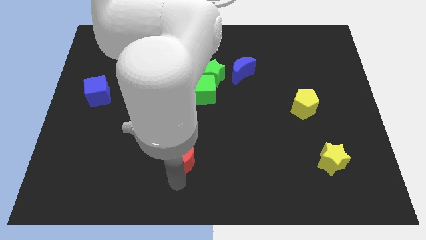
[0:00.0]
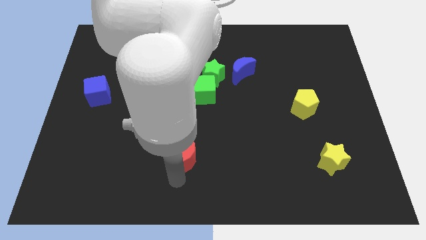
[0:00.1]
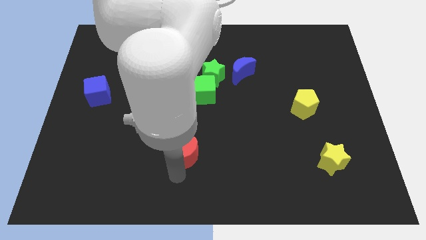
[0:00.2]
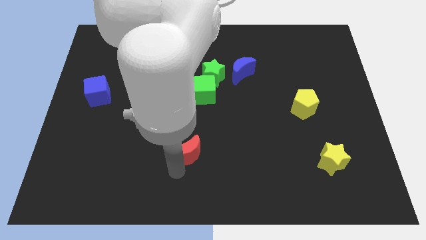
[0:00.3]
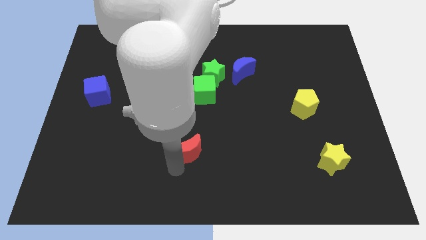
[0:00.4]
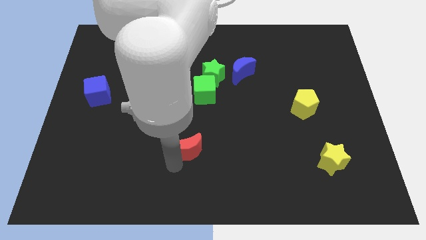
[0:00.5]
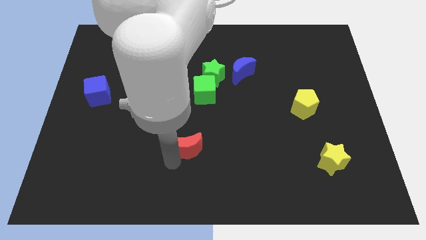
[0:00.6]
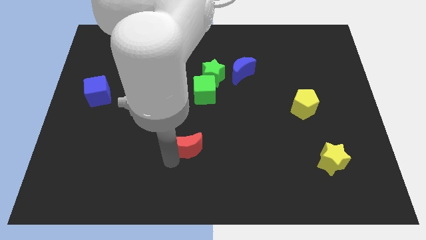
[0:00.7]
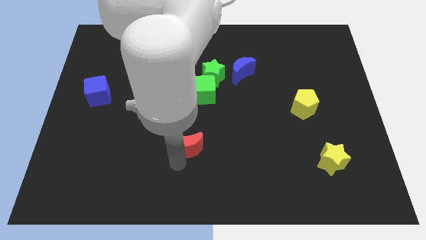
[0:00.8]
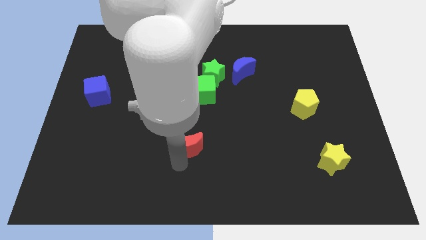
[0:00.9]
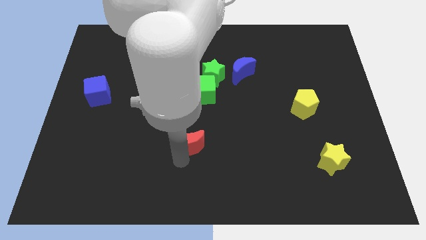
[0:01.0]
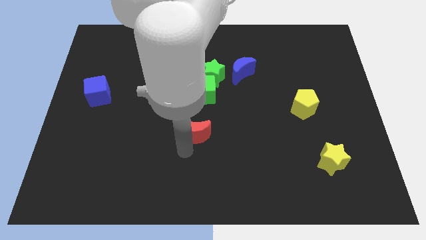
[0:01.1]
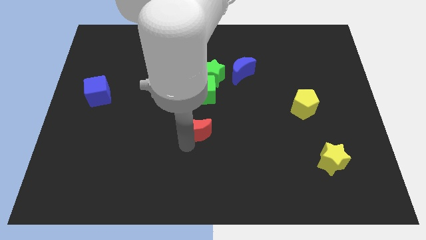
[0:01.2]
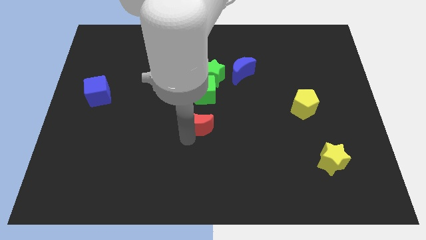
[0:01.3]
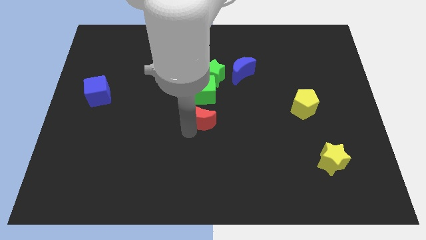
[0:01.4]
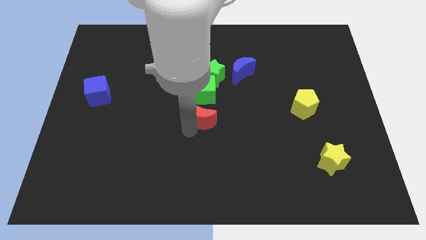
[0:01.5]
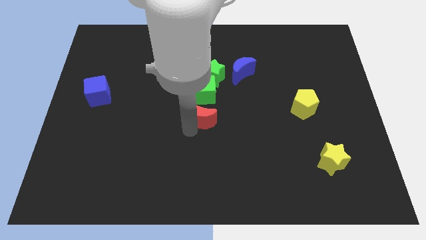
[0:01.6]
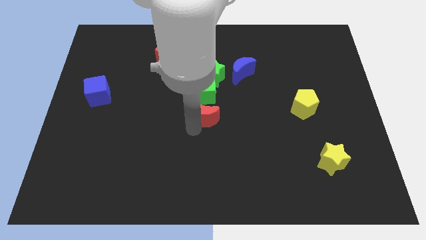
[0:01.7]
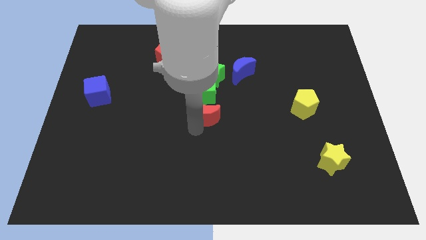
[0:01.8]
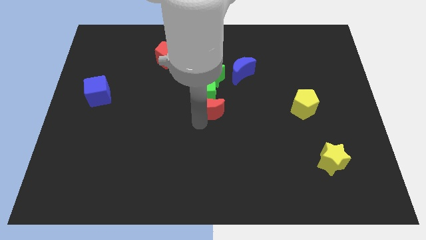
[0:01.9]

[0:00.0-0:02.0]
place the red moon at the bottom of the green cube

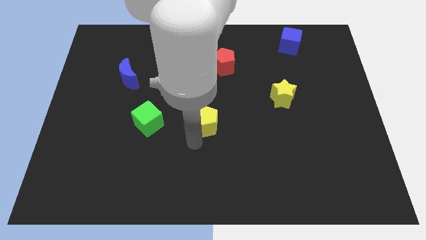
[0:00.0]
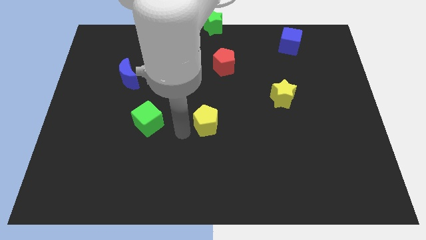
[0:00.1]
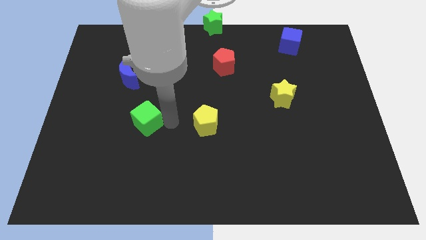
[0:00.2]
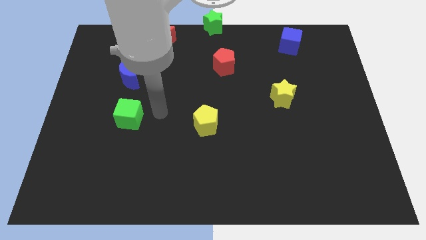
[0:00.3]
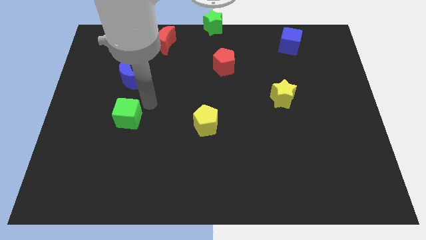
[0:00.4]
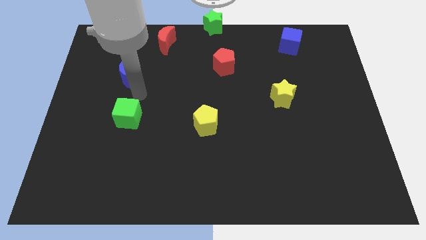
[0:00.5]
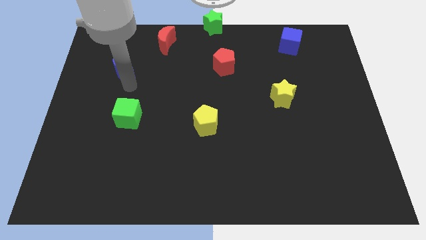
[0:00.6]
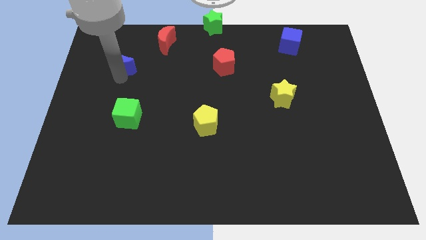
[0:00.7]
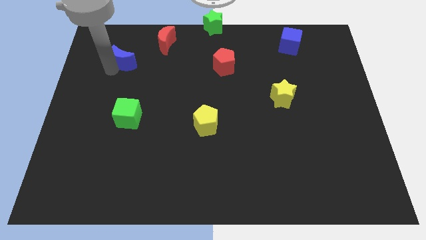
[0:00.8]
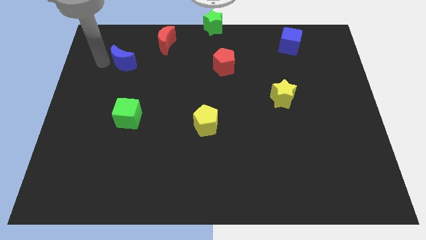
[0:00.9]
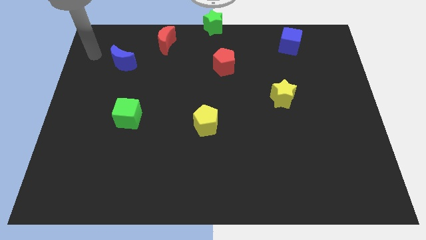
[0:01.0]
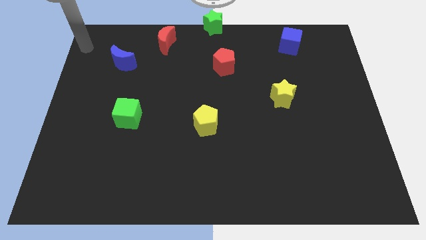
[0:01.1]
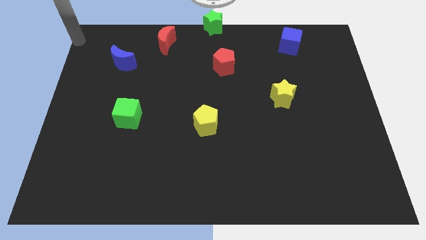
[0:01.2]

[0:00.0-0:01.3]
slide the green cube and the blue cube vertical to each other

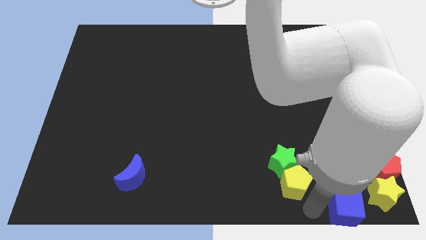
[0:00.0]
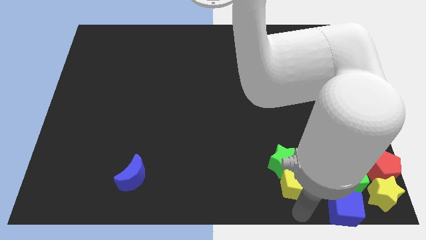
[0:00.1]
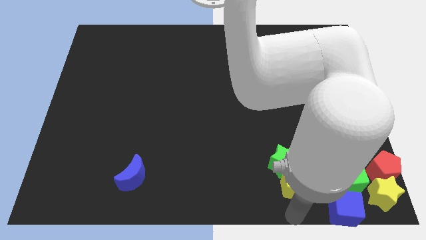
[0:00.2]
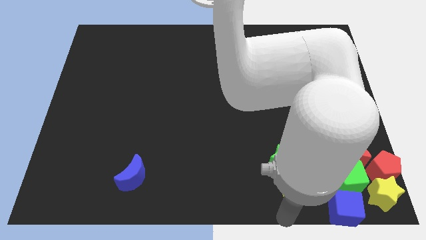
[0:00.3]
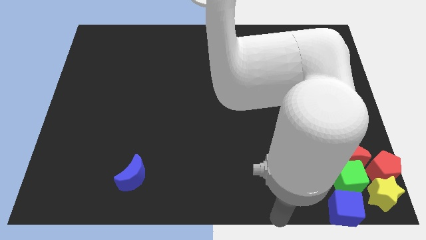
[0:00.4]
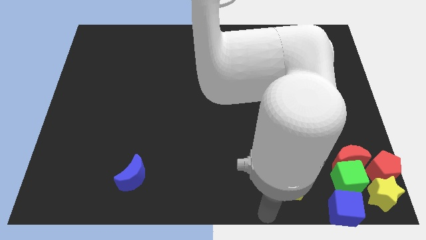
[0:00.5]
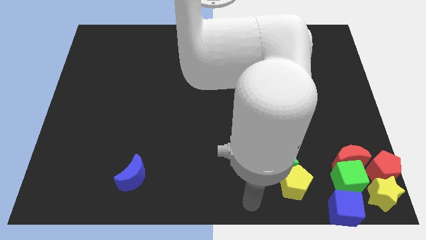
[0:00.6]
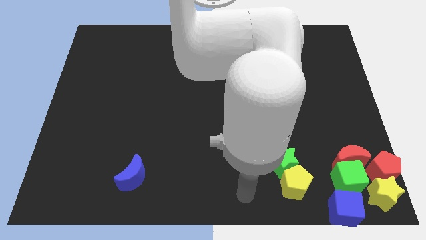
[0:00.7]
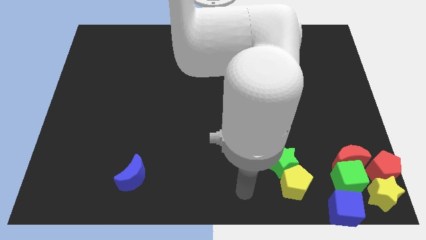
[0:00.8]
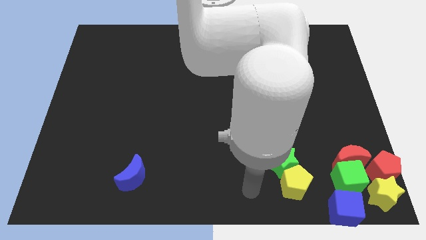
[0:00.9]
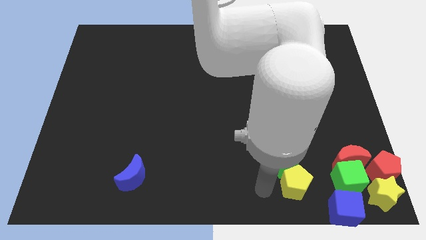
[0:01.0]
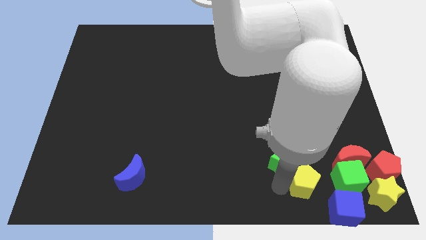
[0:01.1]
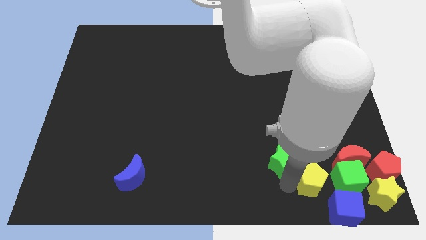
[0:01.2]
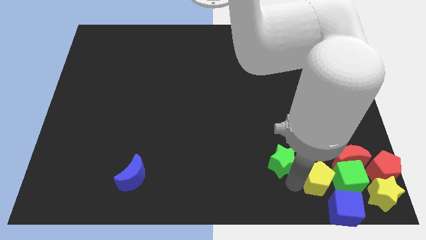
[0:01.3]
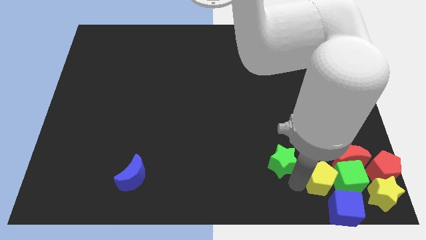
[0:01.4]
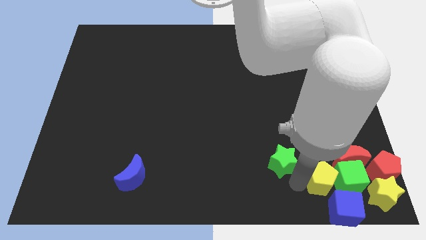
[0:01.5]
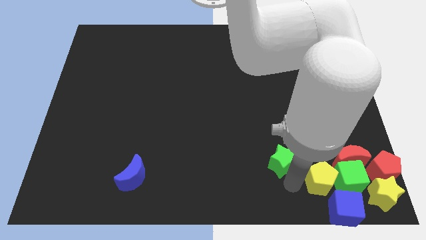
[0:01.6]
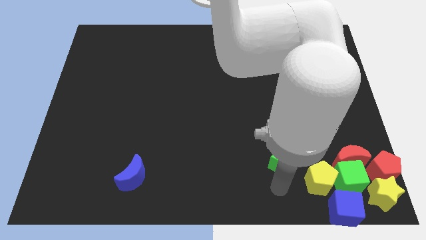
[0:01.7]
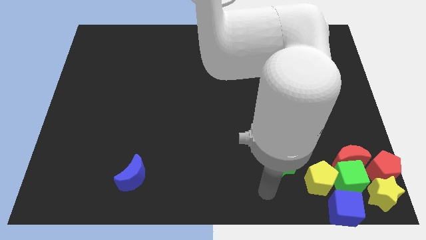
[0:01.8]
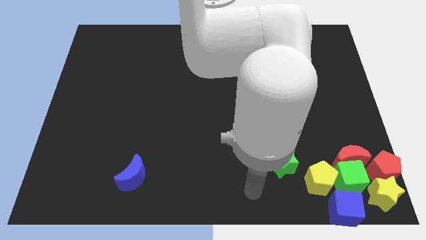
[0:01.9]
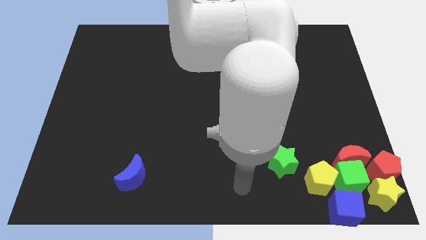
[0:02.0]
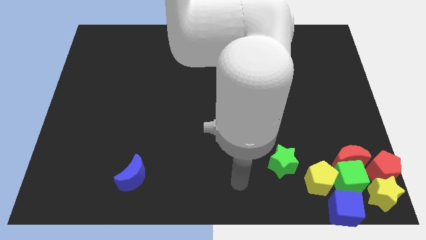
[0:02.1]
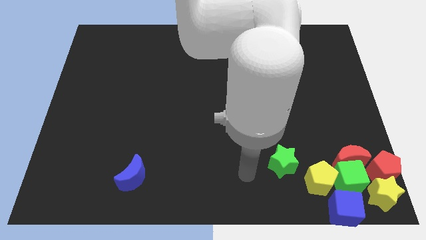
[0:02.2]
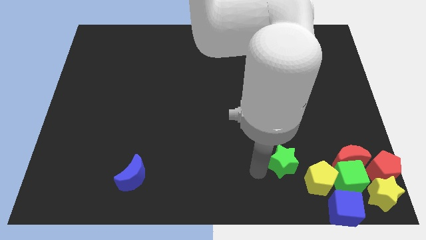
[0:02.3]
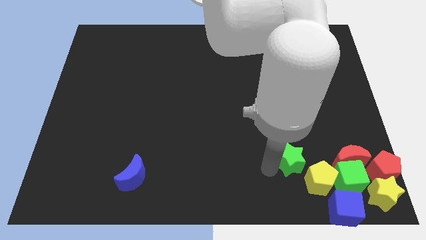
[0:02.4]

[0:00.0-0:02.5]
move the yellow pentagon to the left of the green cube

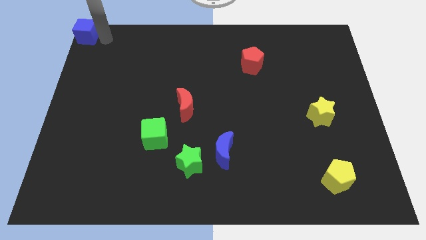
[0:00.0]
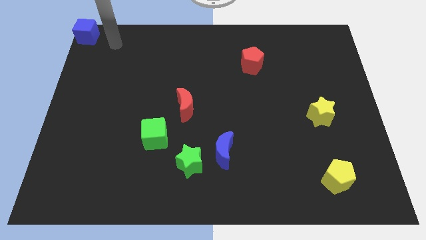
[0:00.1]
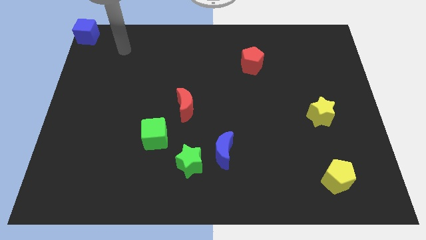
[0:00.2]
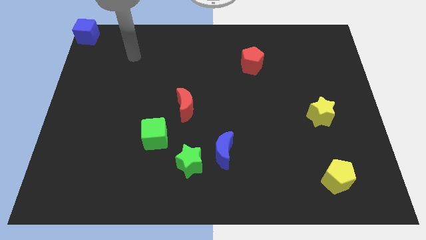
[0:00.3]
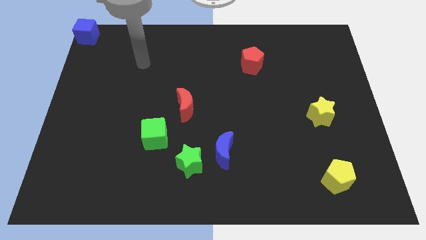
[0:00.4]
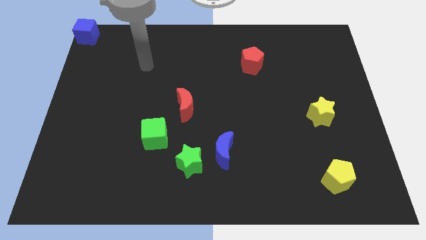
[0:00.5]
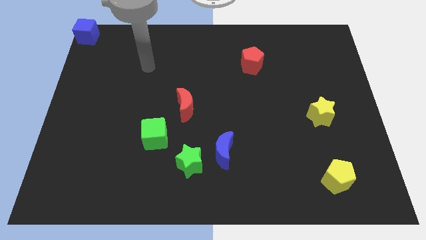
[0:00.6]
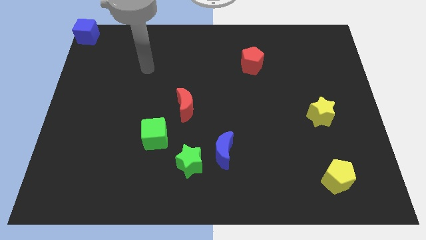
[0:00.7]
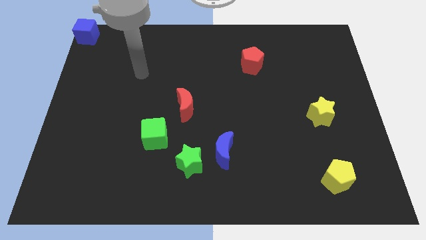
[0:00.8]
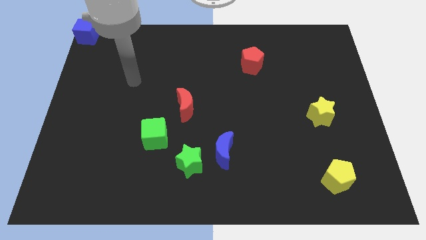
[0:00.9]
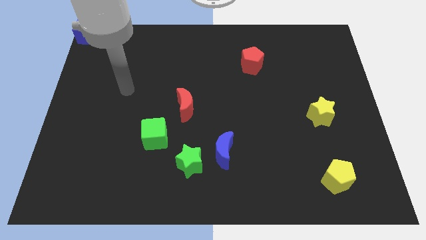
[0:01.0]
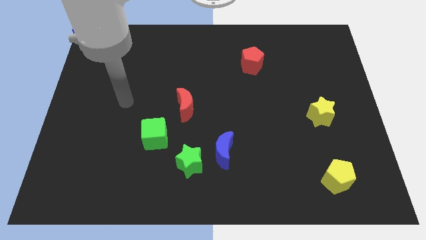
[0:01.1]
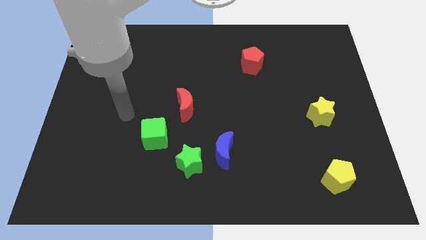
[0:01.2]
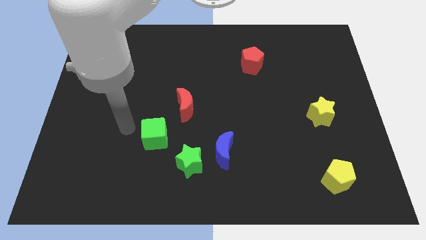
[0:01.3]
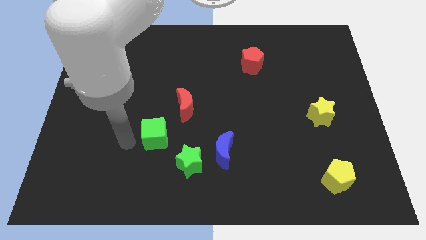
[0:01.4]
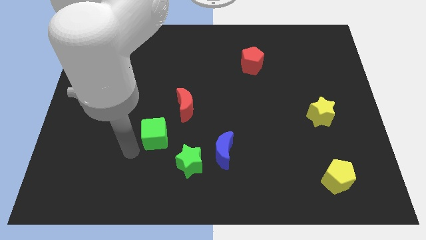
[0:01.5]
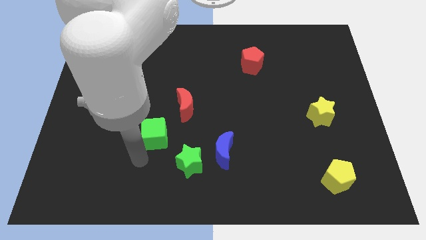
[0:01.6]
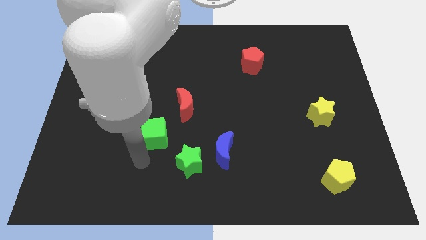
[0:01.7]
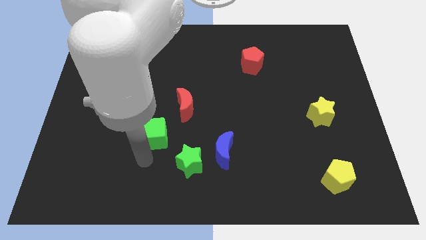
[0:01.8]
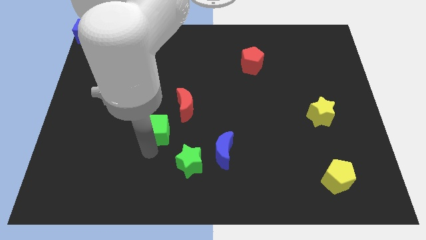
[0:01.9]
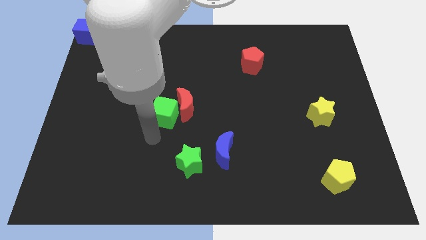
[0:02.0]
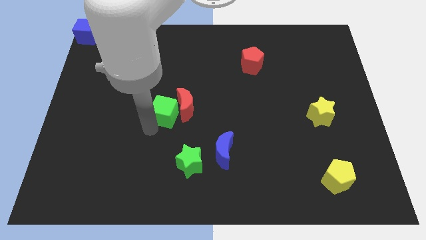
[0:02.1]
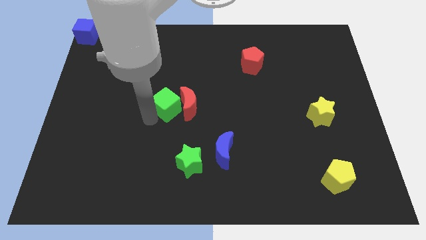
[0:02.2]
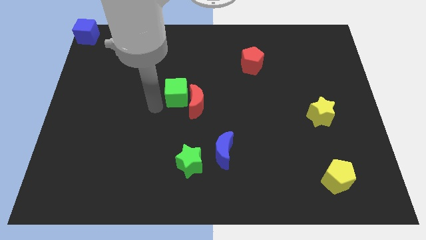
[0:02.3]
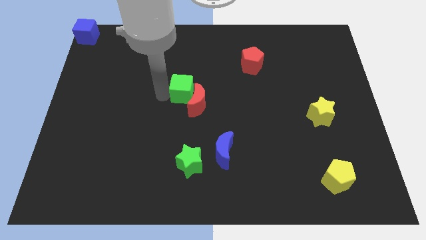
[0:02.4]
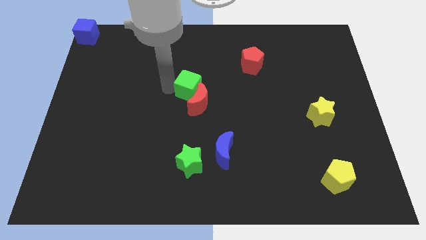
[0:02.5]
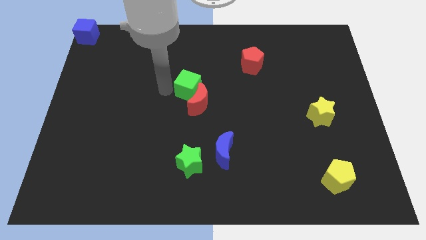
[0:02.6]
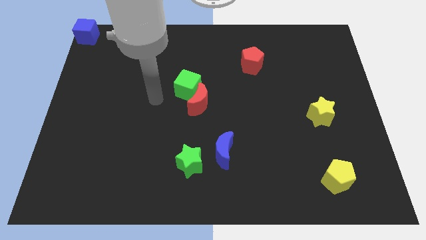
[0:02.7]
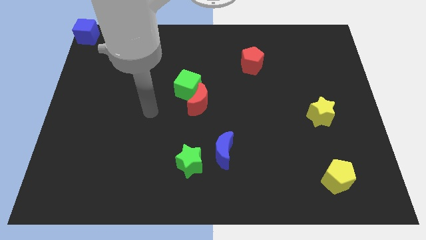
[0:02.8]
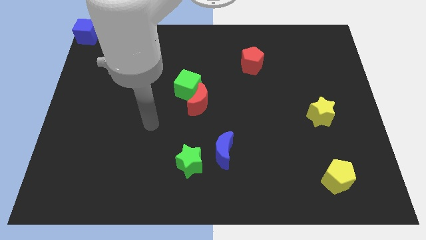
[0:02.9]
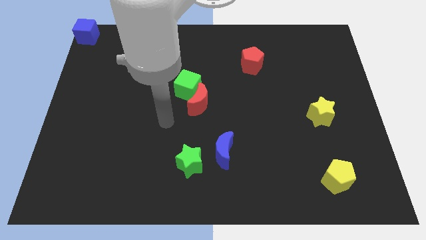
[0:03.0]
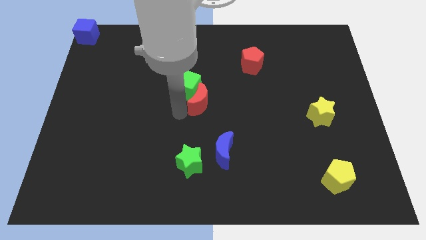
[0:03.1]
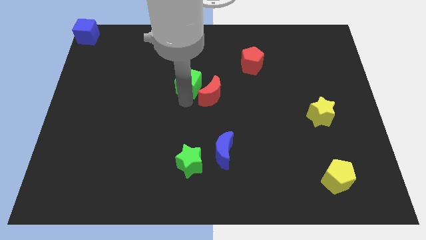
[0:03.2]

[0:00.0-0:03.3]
push the green cube to the top left of the red crescent
